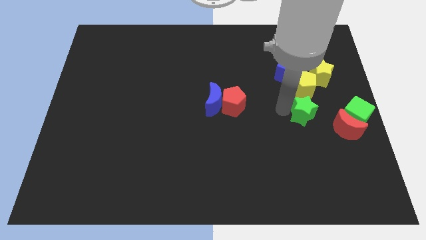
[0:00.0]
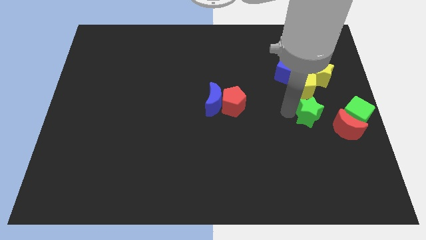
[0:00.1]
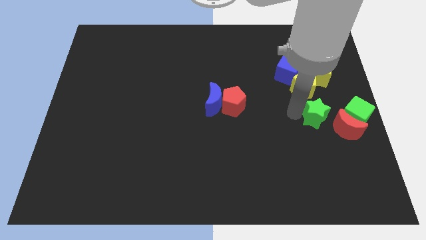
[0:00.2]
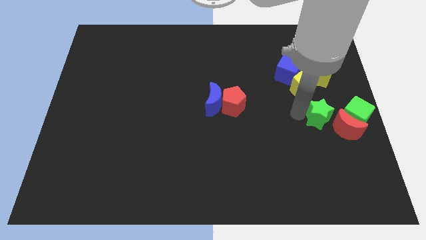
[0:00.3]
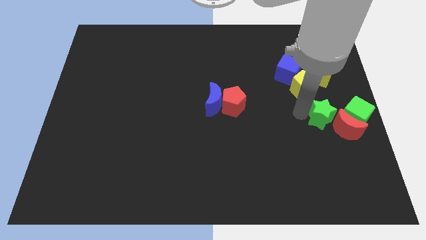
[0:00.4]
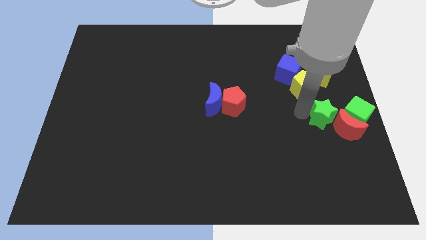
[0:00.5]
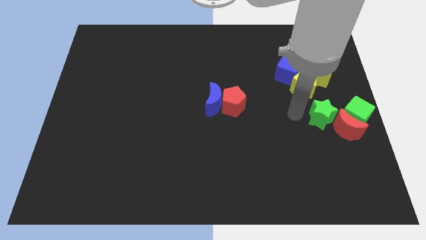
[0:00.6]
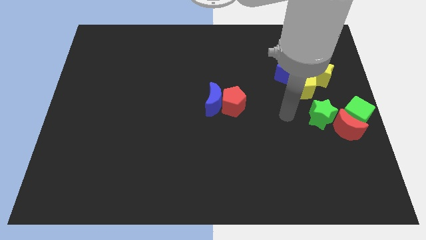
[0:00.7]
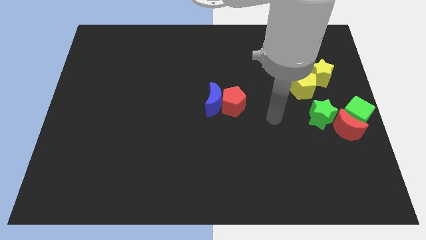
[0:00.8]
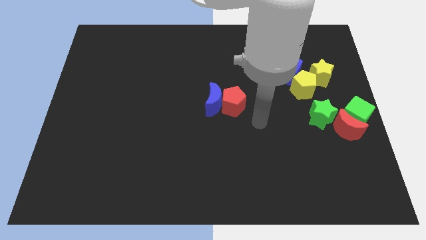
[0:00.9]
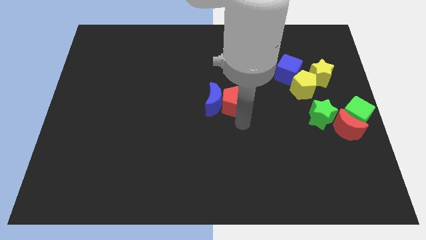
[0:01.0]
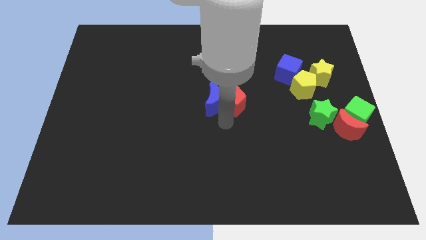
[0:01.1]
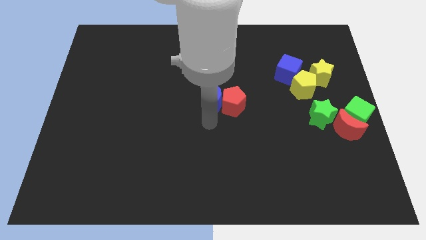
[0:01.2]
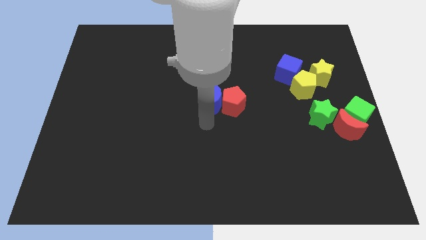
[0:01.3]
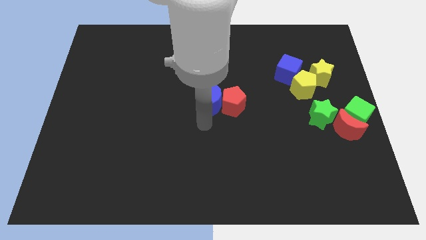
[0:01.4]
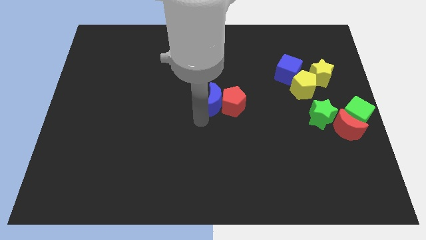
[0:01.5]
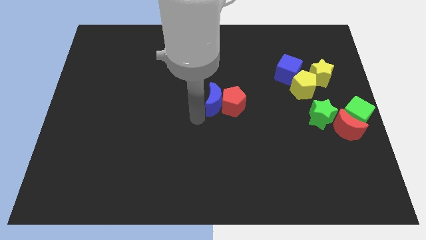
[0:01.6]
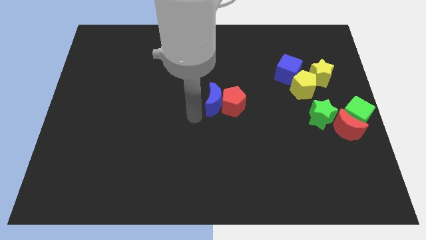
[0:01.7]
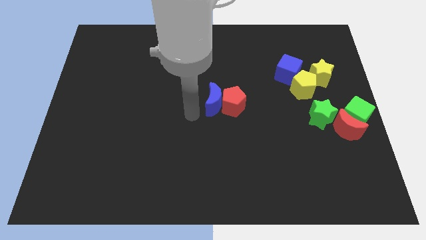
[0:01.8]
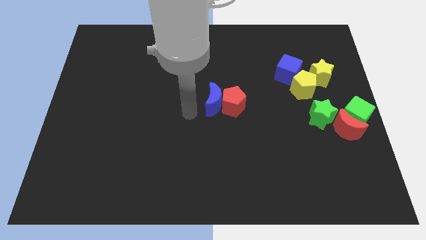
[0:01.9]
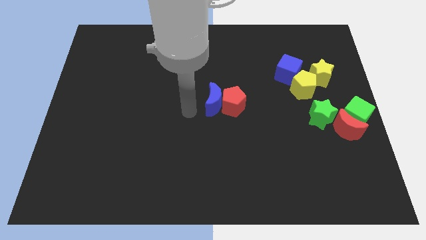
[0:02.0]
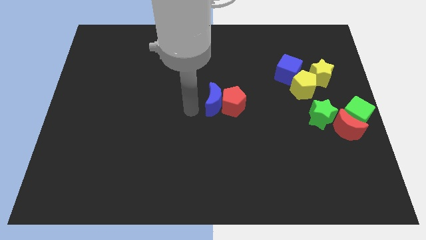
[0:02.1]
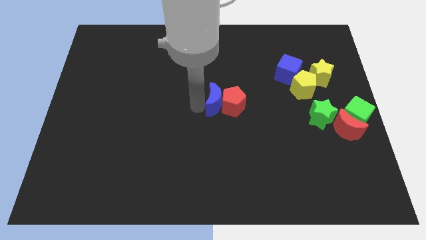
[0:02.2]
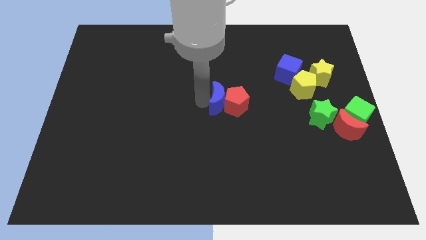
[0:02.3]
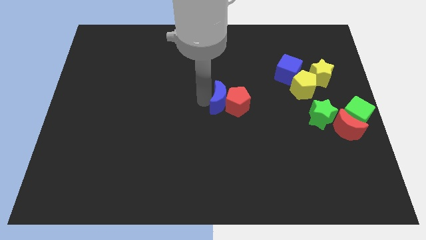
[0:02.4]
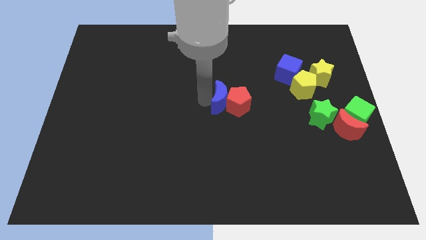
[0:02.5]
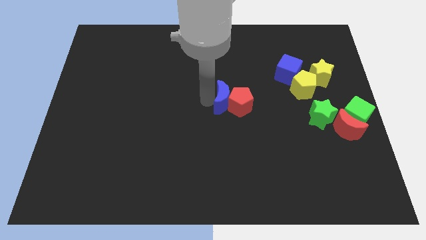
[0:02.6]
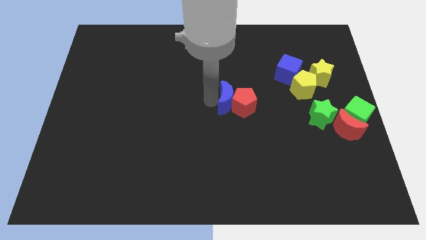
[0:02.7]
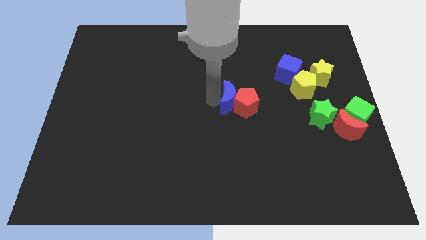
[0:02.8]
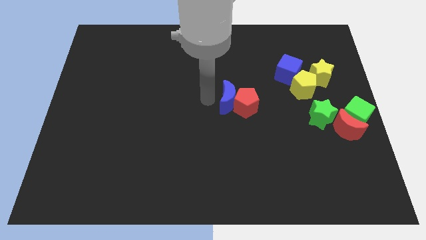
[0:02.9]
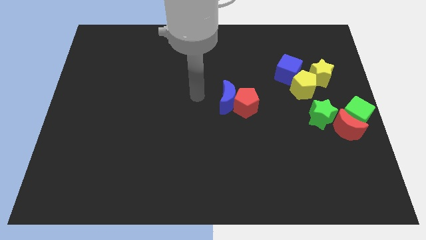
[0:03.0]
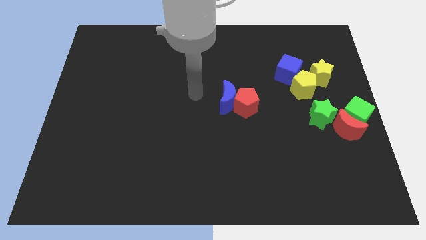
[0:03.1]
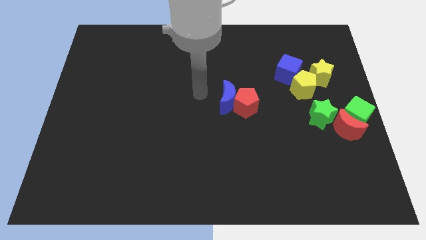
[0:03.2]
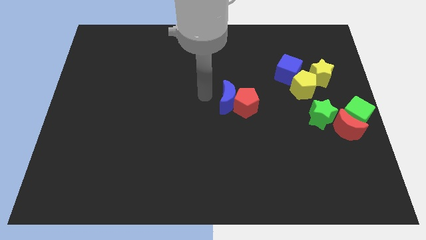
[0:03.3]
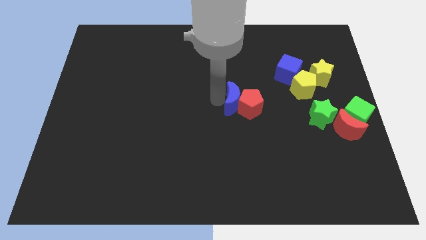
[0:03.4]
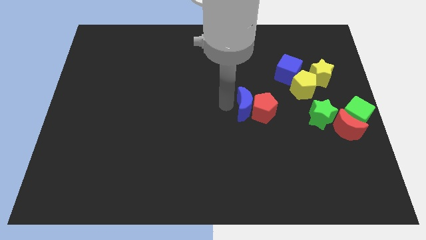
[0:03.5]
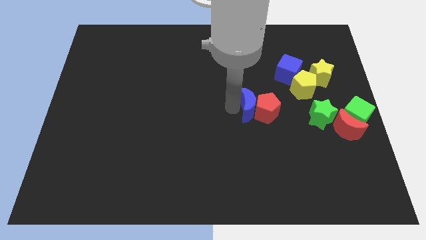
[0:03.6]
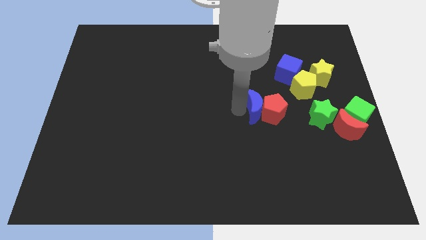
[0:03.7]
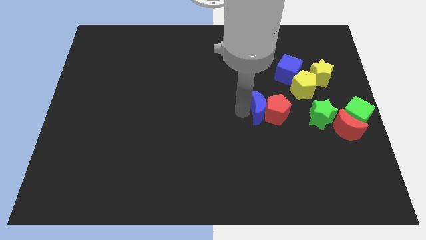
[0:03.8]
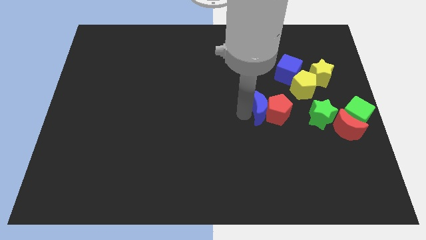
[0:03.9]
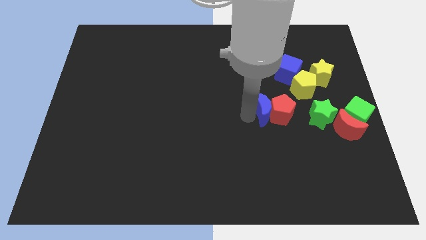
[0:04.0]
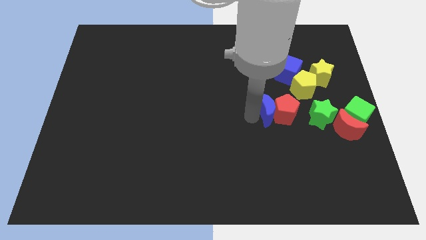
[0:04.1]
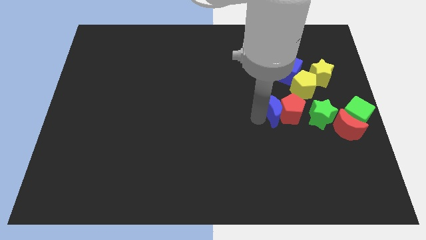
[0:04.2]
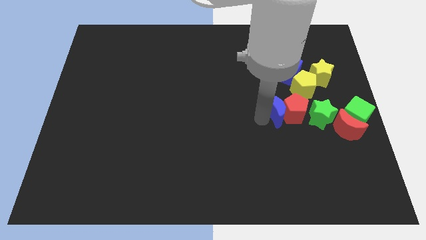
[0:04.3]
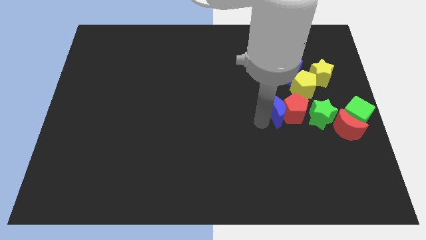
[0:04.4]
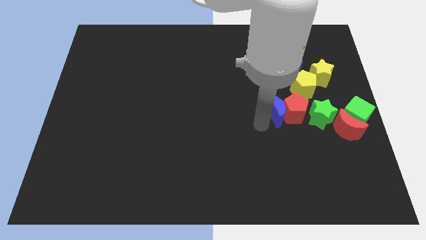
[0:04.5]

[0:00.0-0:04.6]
push blue crescent and red pentagon slightly towards right

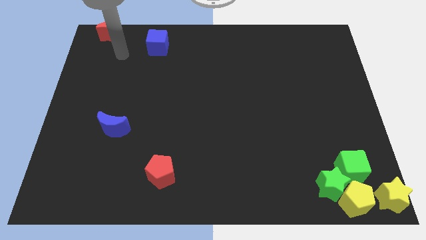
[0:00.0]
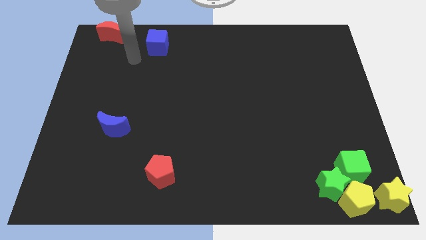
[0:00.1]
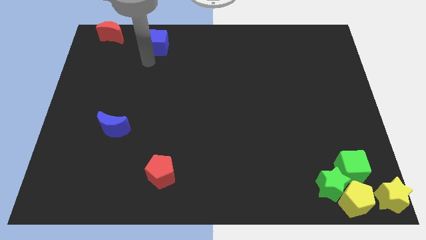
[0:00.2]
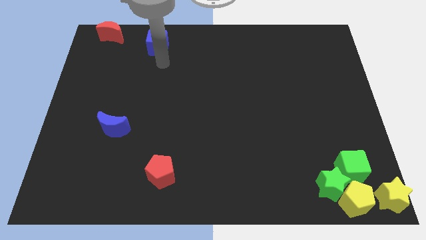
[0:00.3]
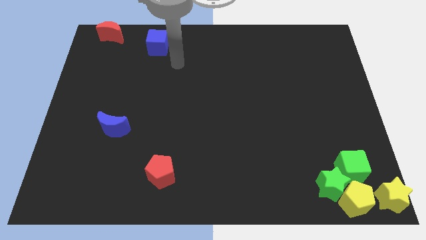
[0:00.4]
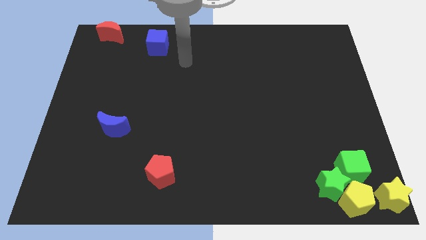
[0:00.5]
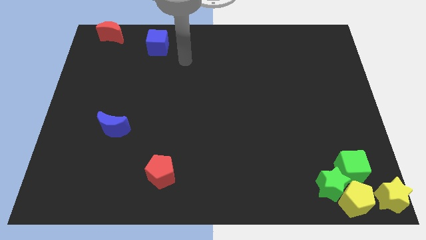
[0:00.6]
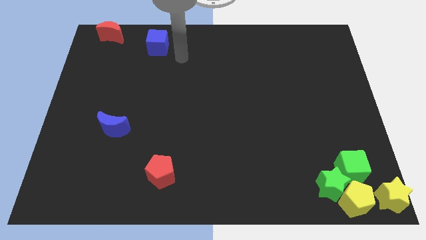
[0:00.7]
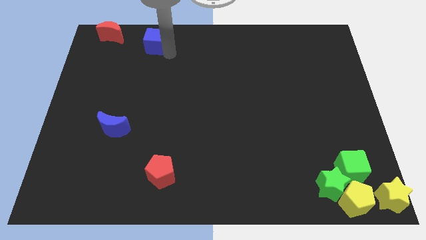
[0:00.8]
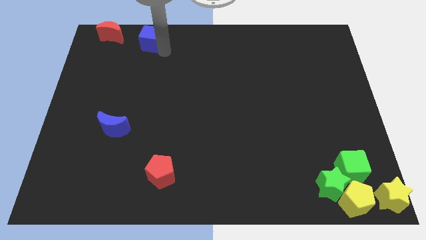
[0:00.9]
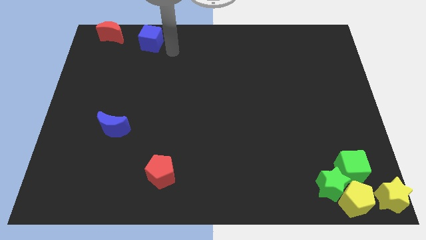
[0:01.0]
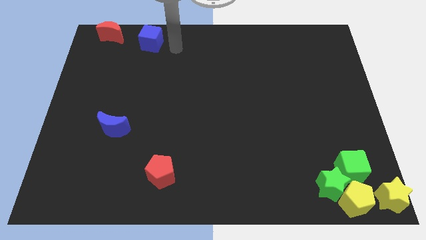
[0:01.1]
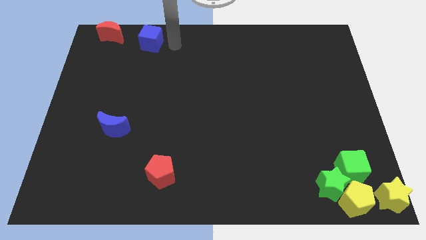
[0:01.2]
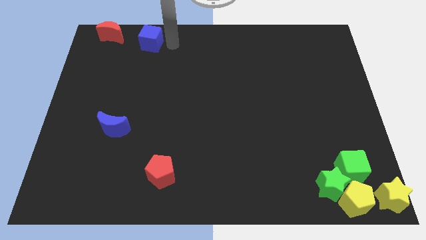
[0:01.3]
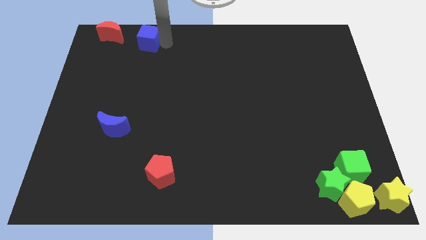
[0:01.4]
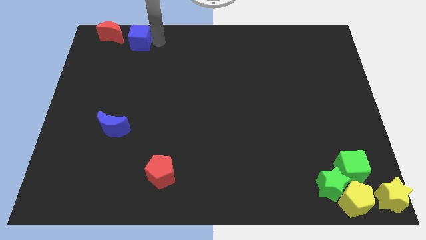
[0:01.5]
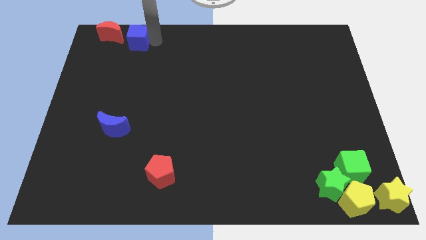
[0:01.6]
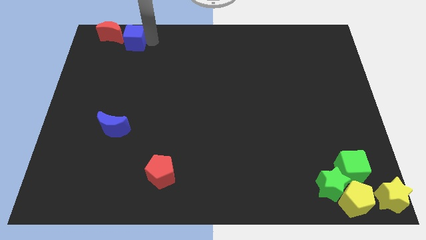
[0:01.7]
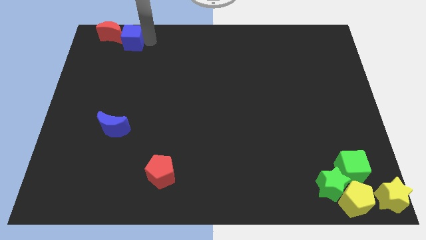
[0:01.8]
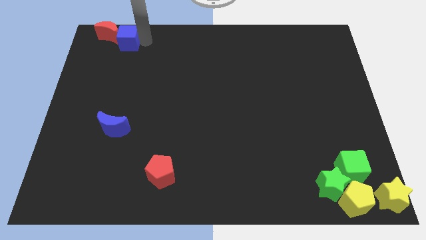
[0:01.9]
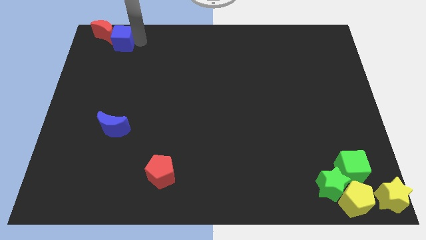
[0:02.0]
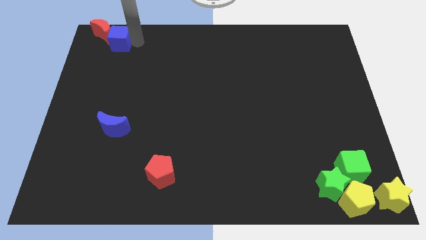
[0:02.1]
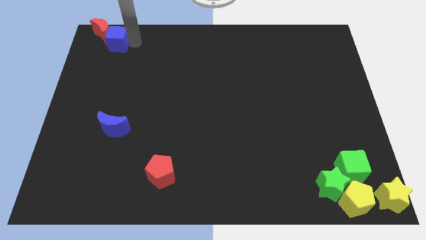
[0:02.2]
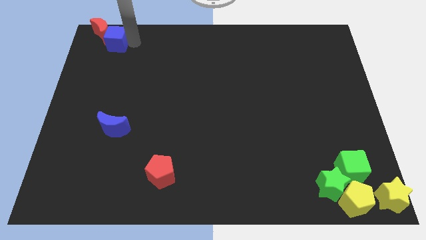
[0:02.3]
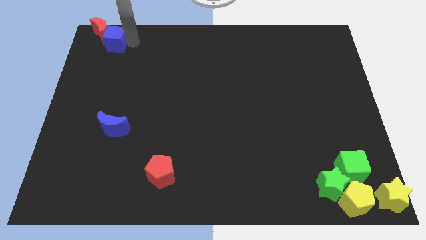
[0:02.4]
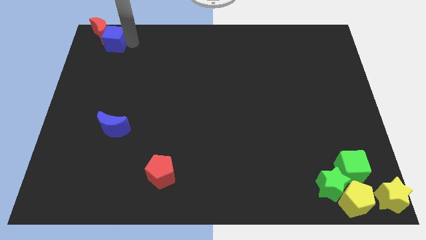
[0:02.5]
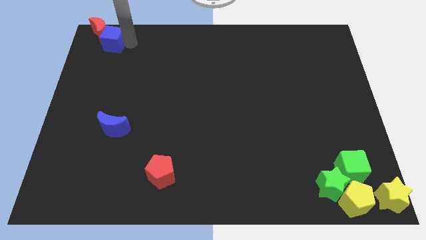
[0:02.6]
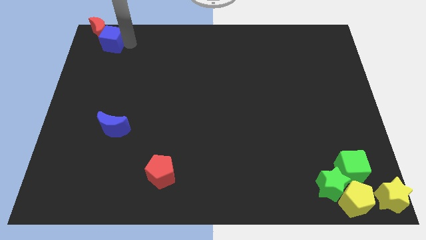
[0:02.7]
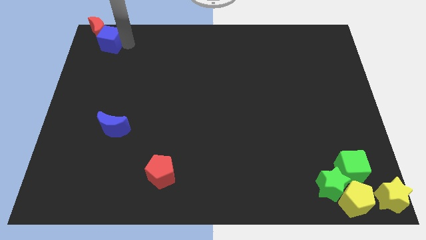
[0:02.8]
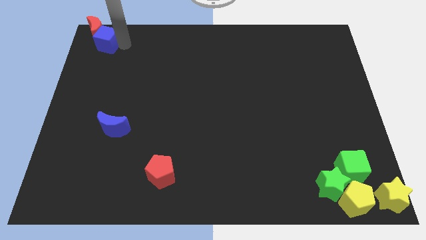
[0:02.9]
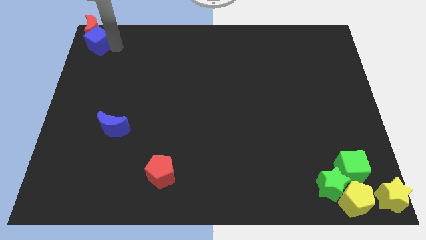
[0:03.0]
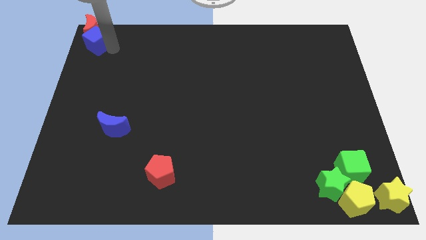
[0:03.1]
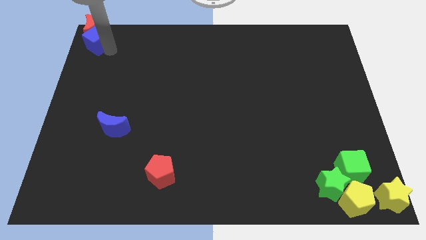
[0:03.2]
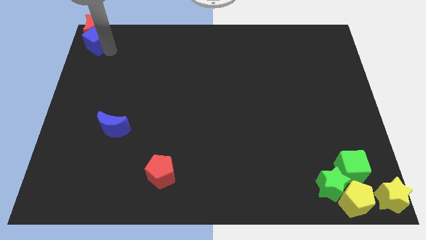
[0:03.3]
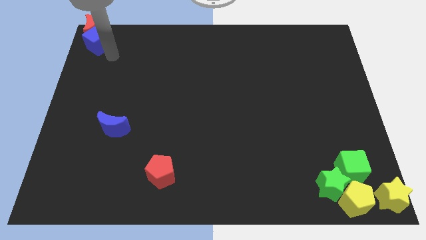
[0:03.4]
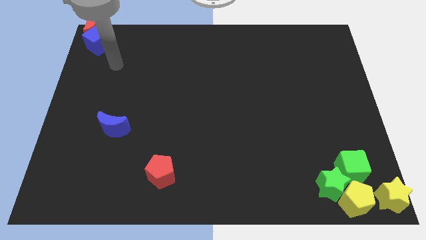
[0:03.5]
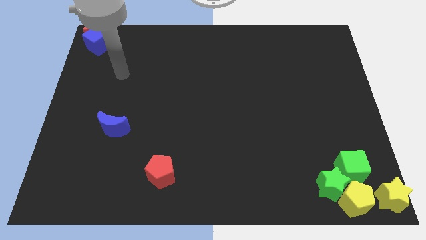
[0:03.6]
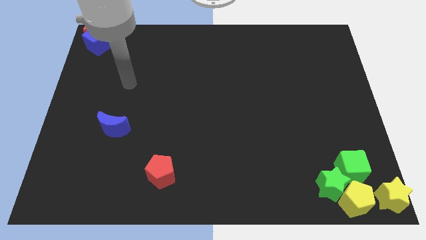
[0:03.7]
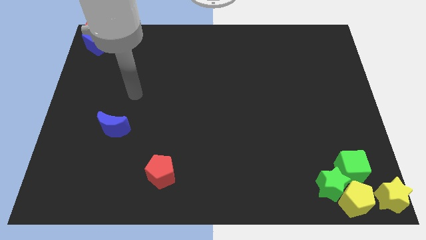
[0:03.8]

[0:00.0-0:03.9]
move the blue cube and the red crescent to the top left corner of the board

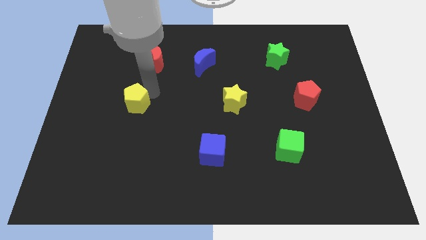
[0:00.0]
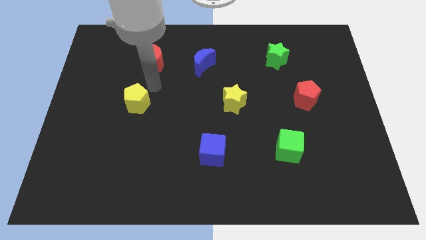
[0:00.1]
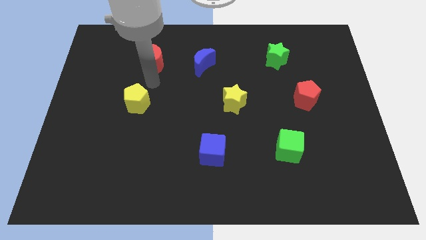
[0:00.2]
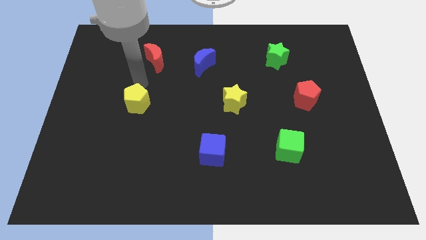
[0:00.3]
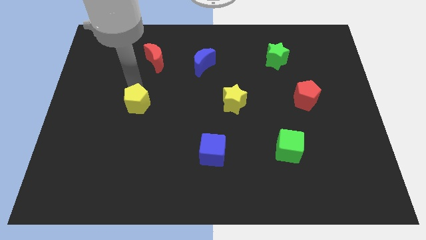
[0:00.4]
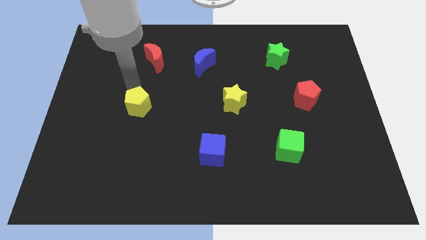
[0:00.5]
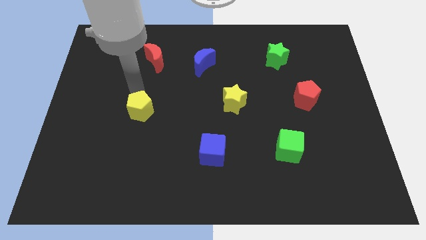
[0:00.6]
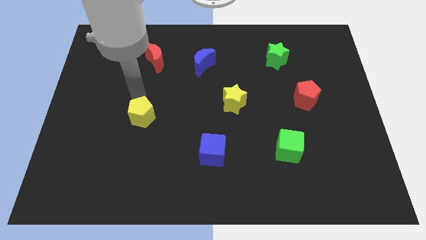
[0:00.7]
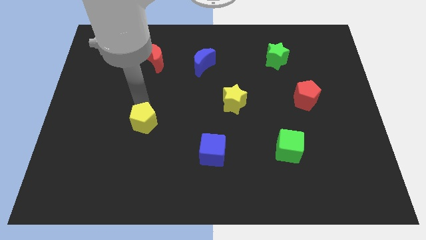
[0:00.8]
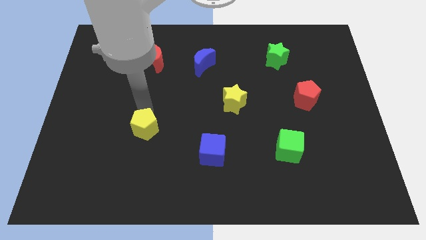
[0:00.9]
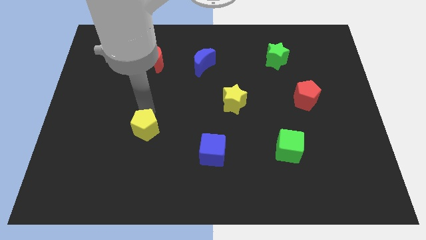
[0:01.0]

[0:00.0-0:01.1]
move the yellow pentagon to the bottom of the board
